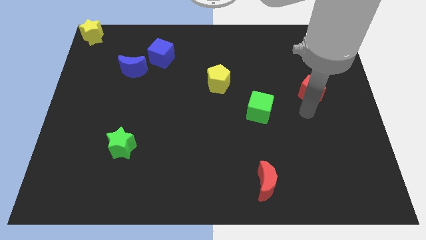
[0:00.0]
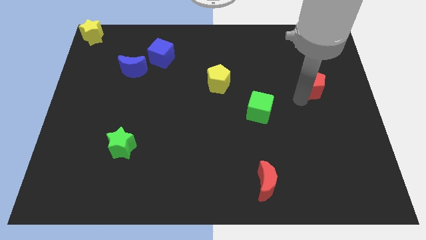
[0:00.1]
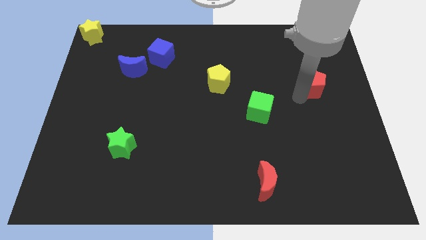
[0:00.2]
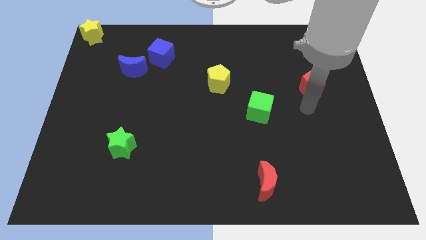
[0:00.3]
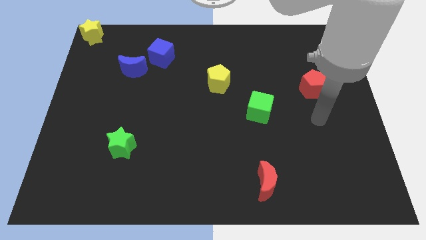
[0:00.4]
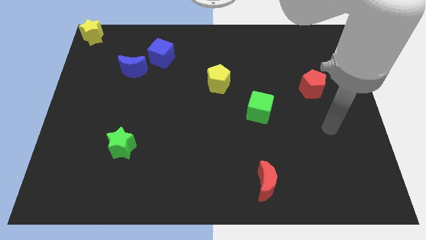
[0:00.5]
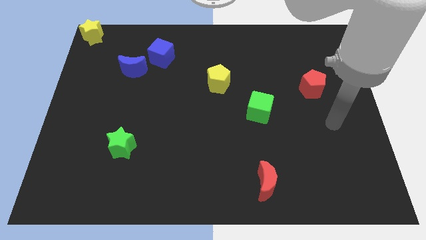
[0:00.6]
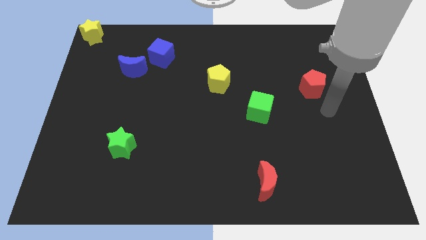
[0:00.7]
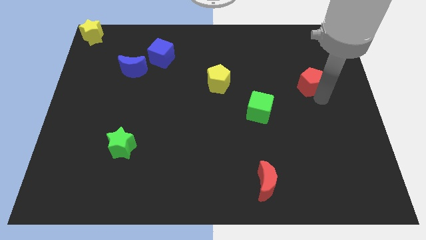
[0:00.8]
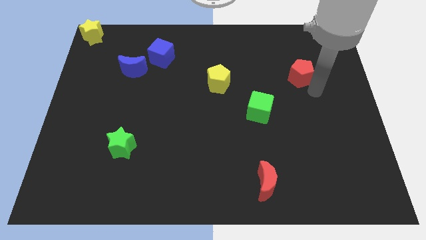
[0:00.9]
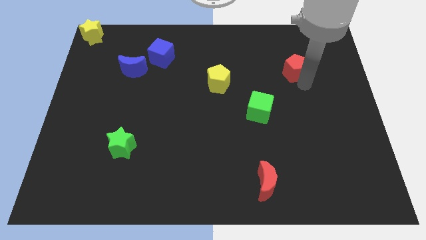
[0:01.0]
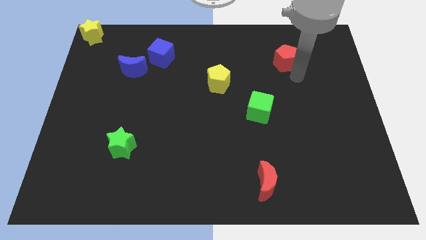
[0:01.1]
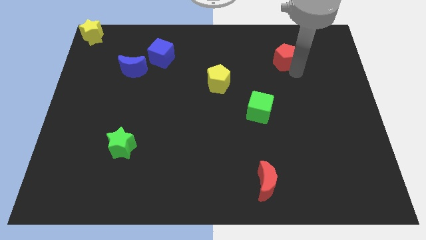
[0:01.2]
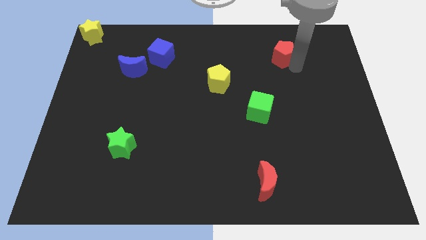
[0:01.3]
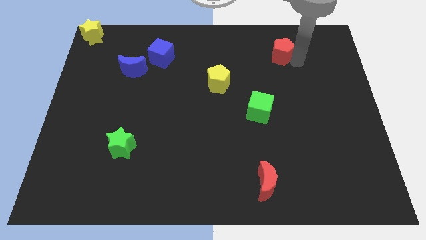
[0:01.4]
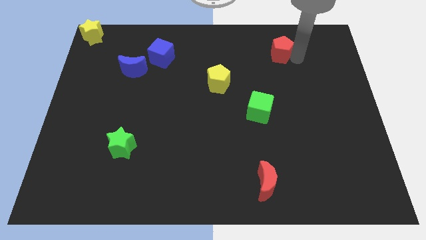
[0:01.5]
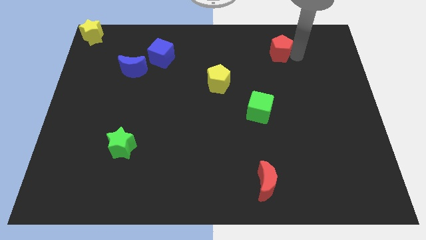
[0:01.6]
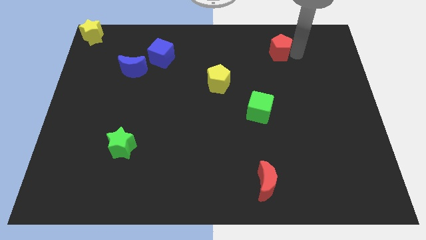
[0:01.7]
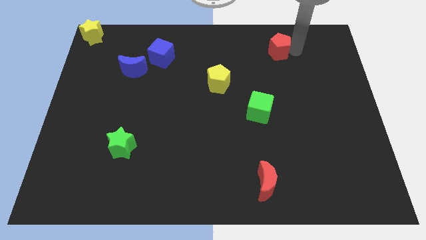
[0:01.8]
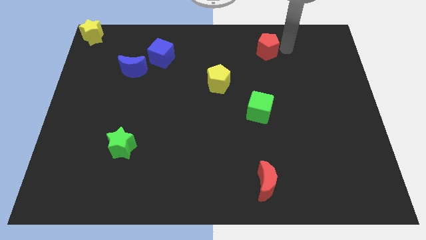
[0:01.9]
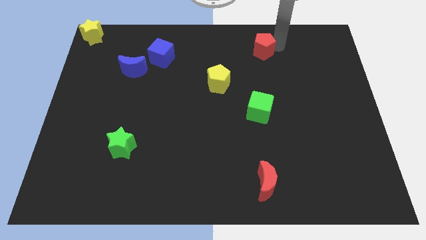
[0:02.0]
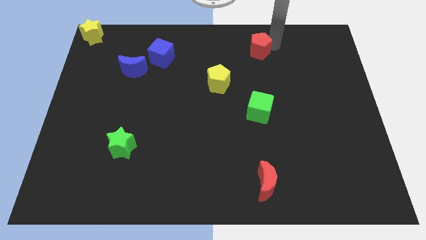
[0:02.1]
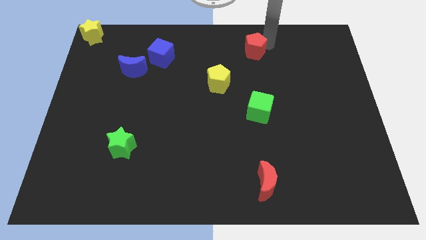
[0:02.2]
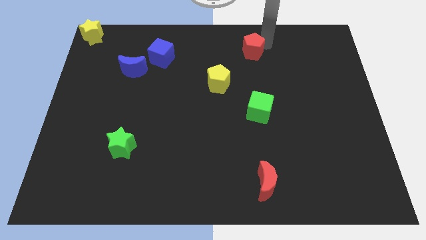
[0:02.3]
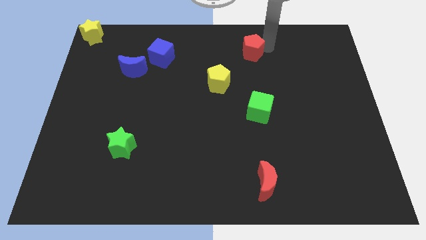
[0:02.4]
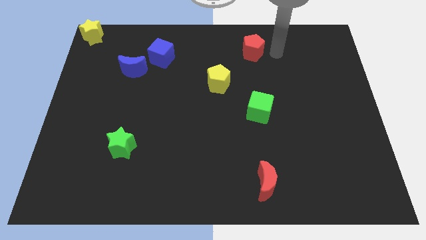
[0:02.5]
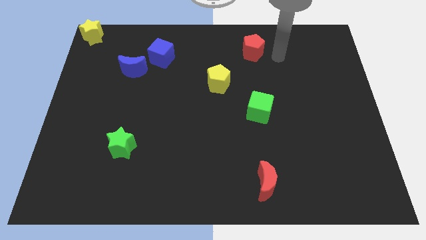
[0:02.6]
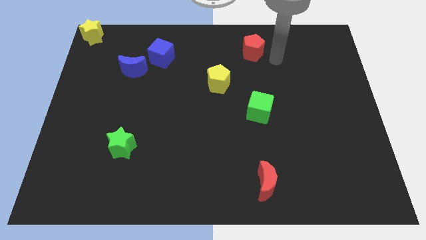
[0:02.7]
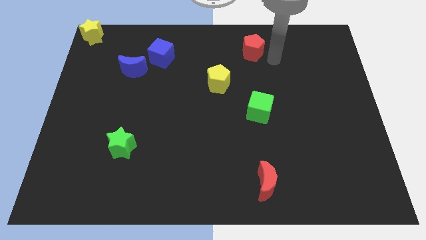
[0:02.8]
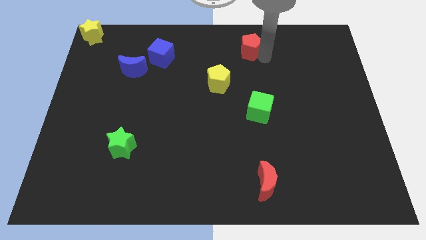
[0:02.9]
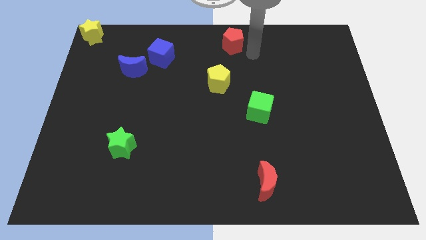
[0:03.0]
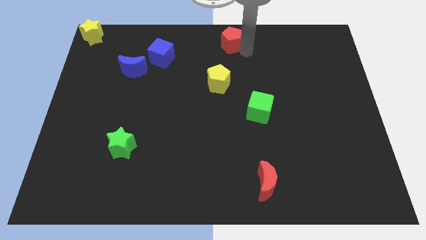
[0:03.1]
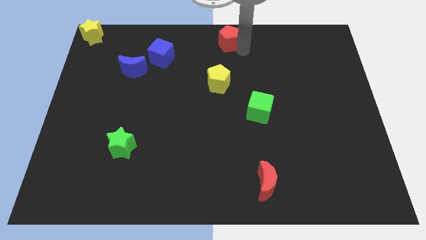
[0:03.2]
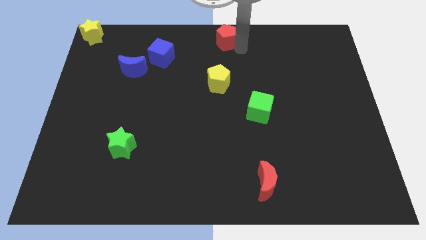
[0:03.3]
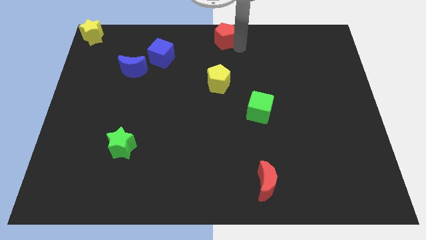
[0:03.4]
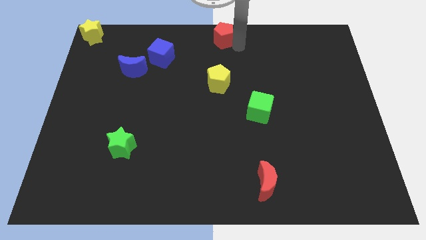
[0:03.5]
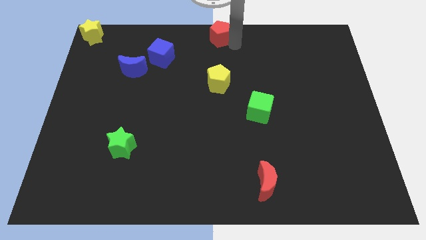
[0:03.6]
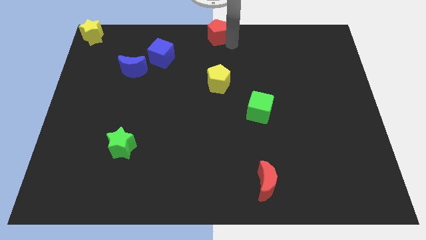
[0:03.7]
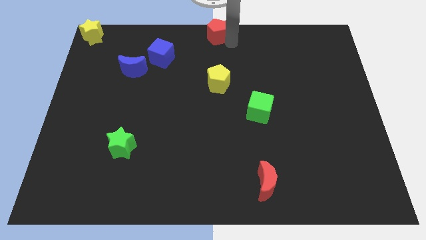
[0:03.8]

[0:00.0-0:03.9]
move the red pentagon diagonally to blue cube

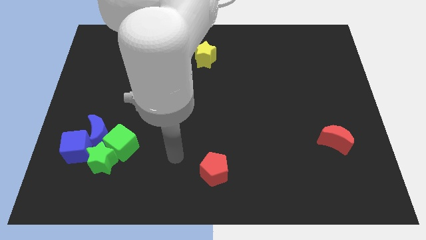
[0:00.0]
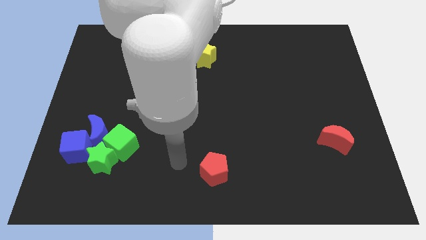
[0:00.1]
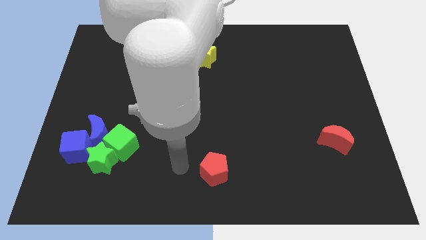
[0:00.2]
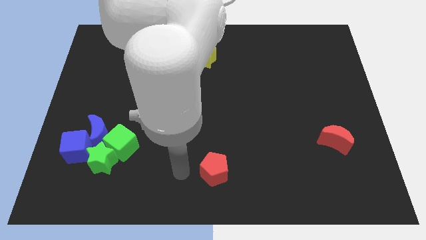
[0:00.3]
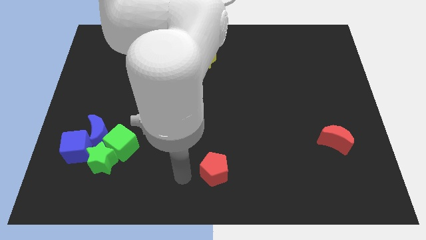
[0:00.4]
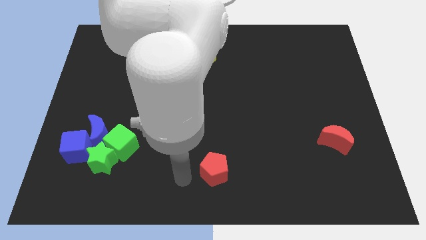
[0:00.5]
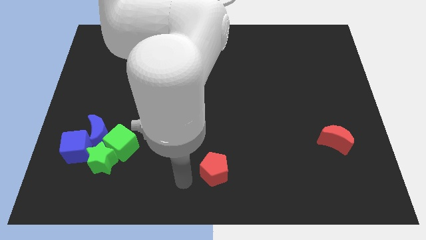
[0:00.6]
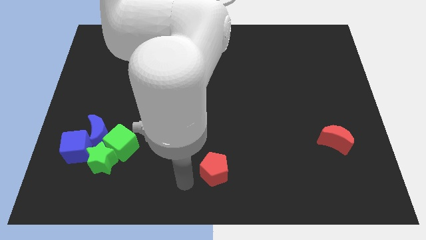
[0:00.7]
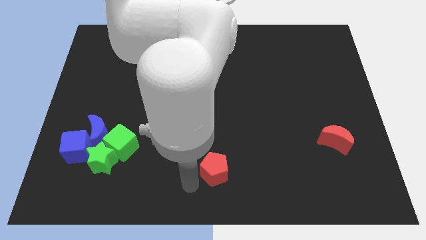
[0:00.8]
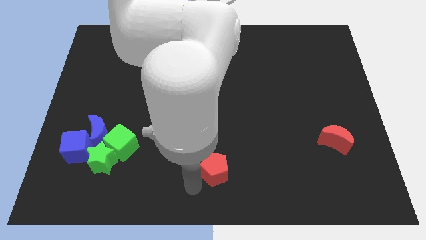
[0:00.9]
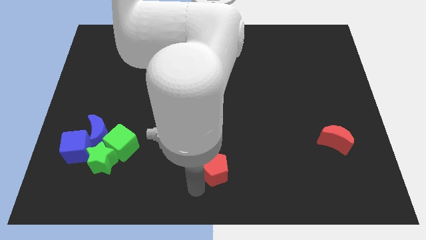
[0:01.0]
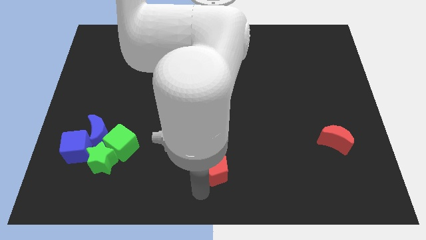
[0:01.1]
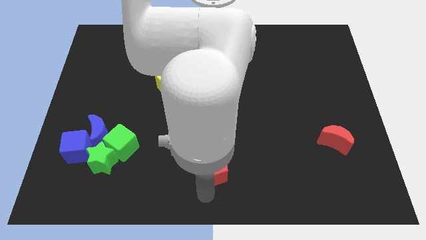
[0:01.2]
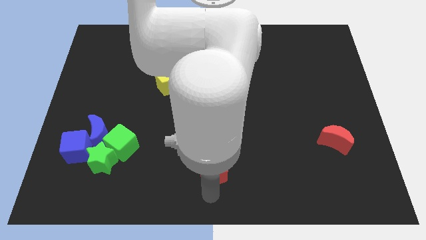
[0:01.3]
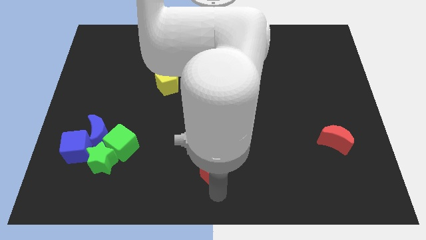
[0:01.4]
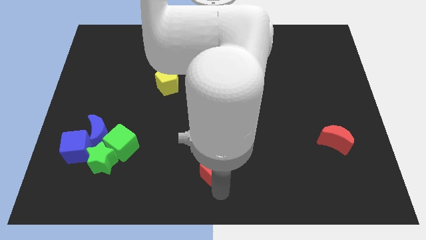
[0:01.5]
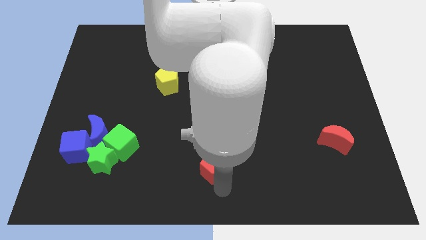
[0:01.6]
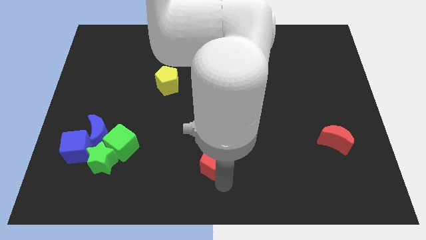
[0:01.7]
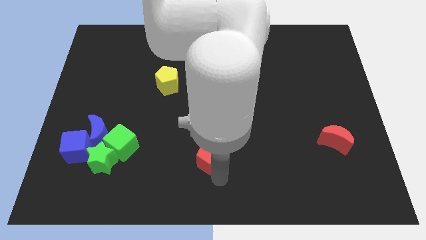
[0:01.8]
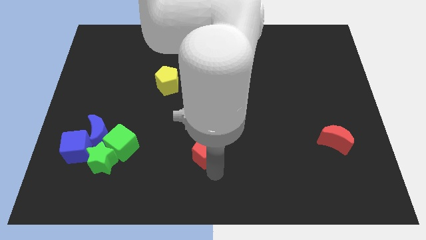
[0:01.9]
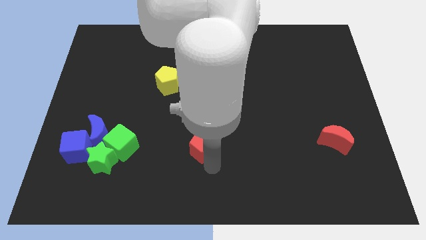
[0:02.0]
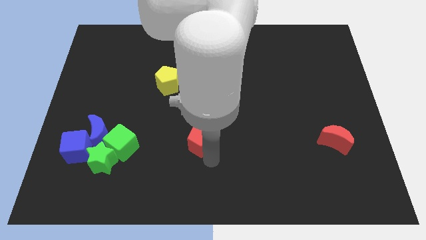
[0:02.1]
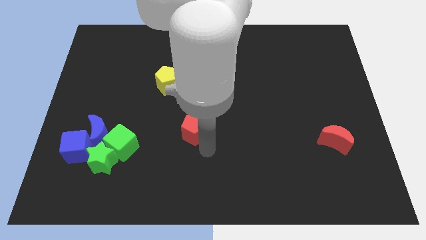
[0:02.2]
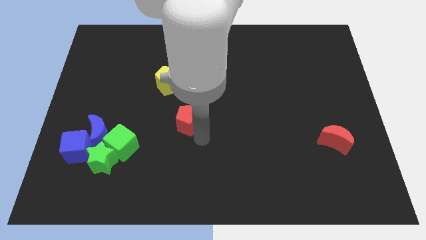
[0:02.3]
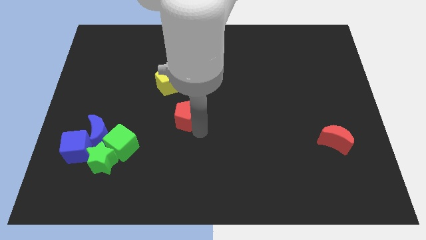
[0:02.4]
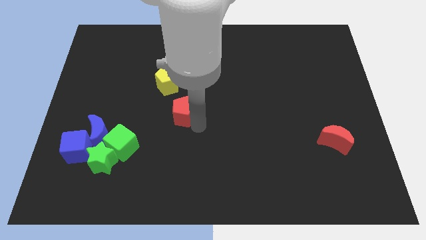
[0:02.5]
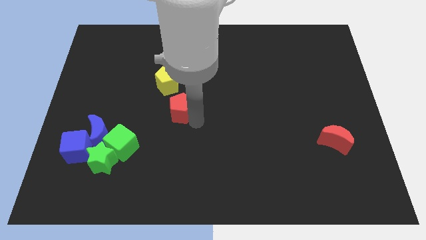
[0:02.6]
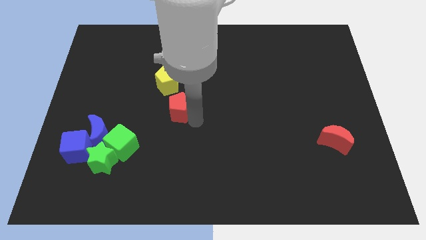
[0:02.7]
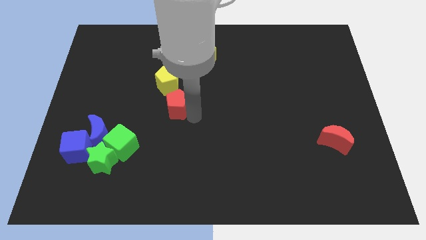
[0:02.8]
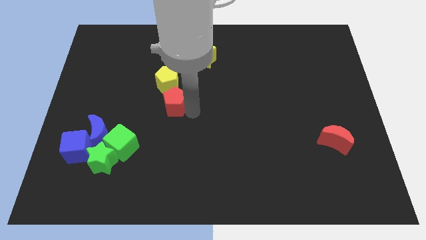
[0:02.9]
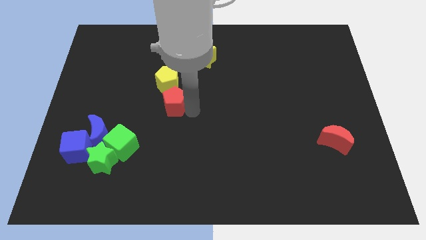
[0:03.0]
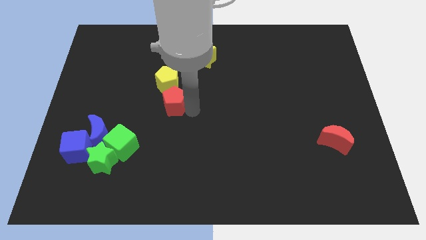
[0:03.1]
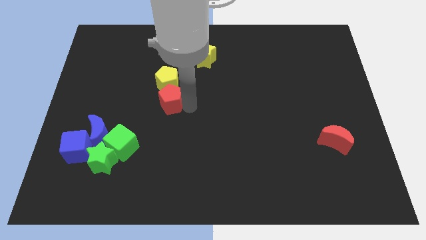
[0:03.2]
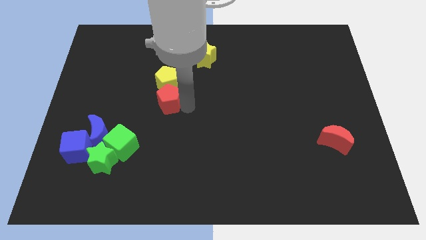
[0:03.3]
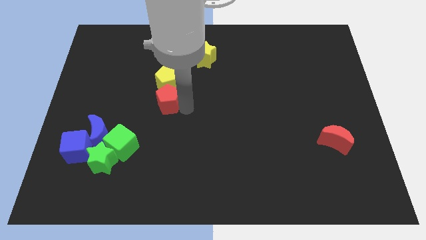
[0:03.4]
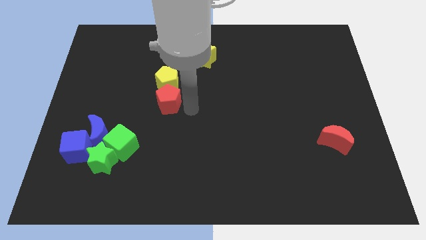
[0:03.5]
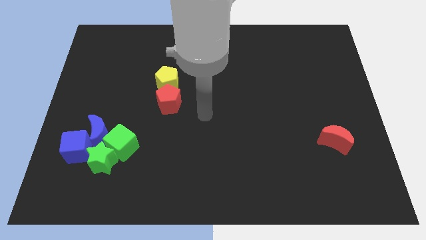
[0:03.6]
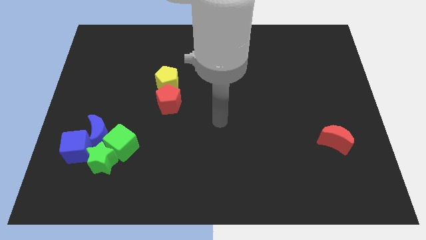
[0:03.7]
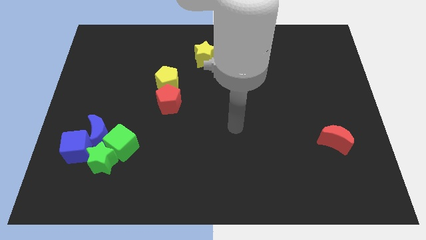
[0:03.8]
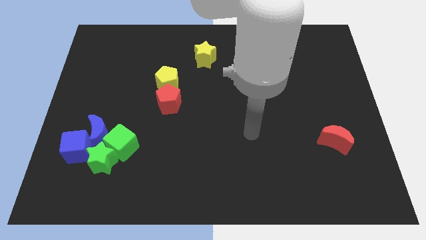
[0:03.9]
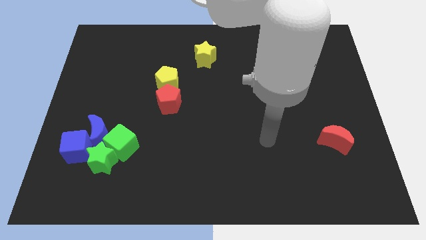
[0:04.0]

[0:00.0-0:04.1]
push the red pentagon to the bottom side of the yellow pentagon

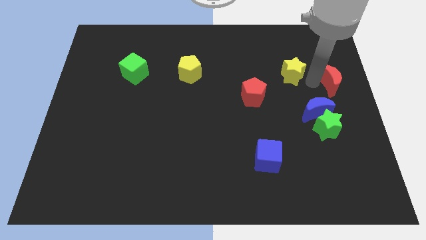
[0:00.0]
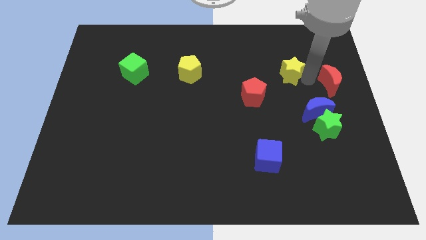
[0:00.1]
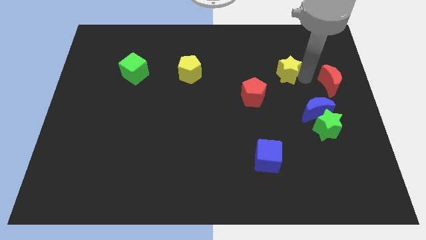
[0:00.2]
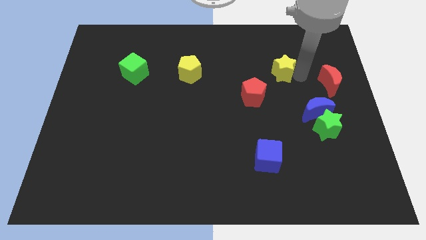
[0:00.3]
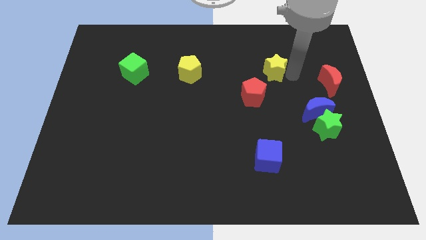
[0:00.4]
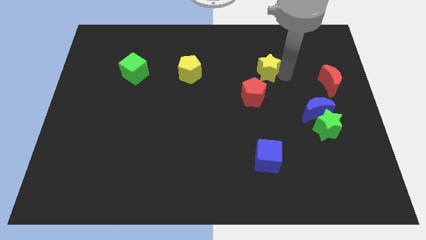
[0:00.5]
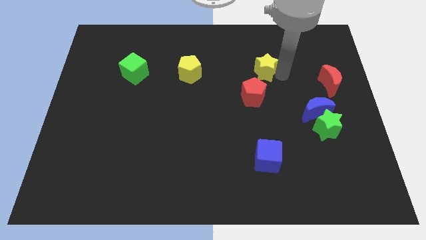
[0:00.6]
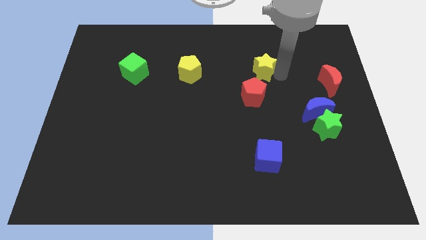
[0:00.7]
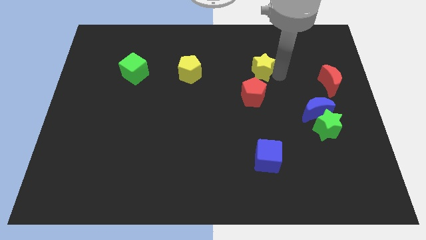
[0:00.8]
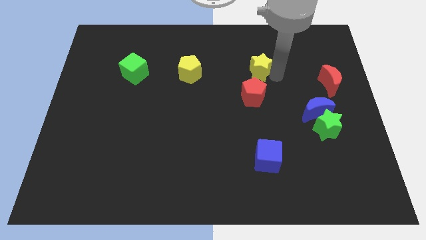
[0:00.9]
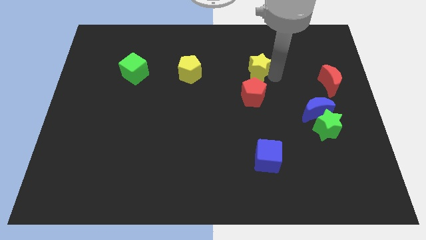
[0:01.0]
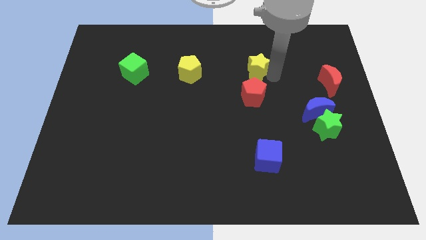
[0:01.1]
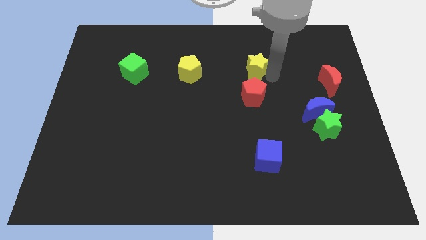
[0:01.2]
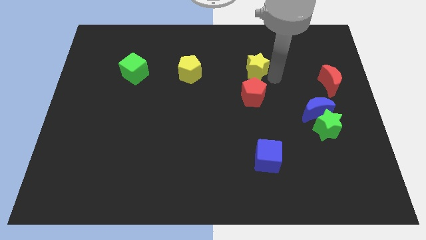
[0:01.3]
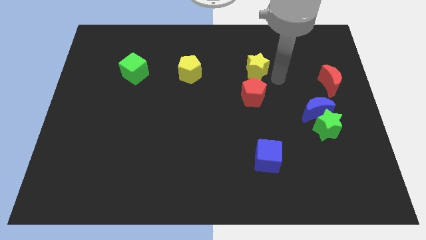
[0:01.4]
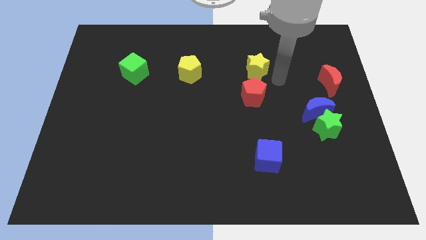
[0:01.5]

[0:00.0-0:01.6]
place the yellow star on top of the red pentagon
